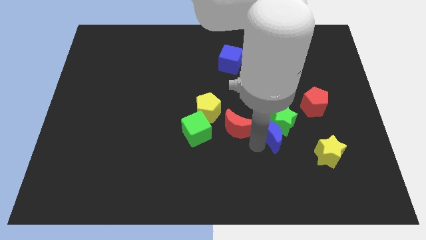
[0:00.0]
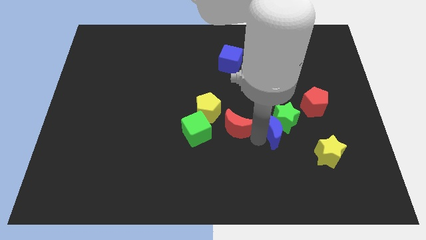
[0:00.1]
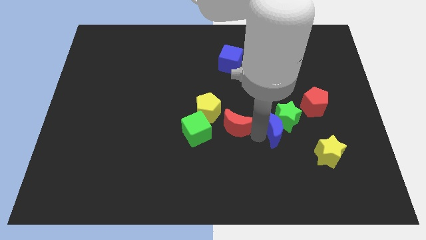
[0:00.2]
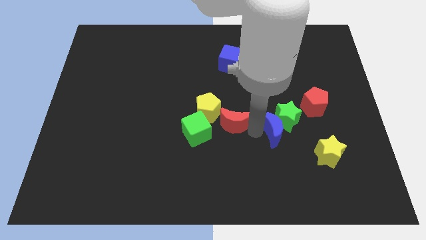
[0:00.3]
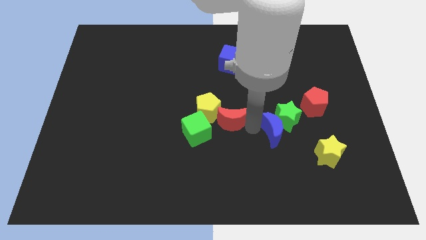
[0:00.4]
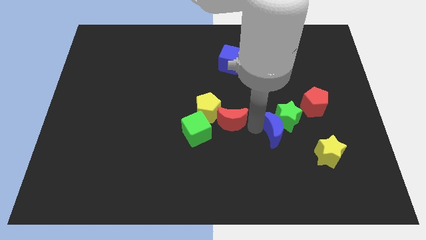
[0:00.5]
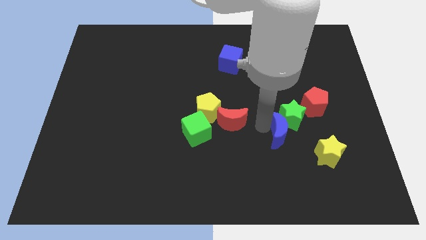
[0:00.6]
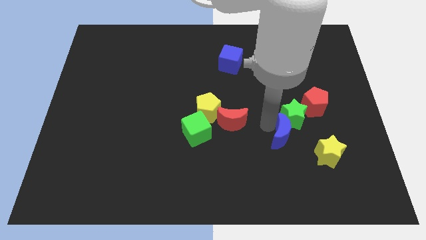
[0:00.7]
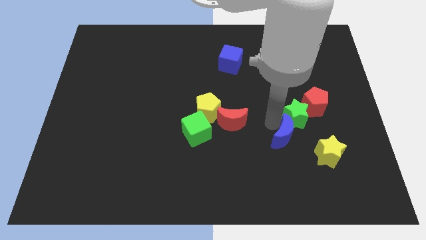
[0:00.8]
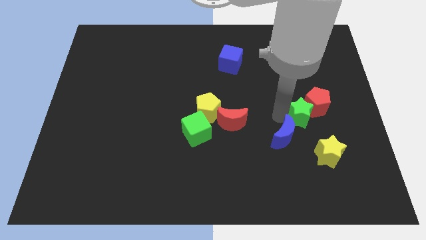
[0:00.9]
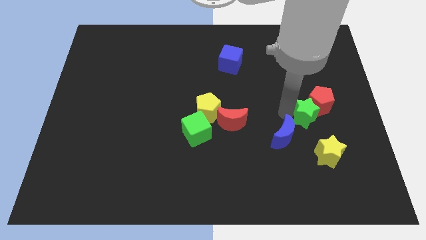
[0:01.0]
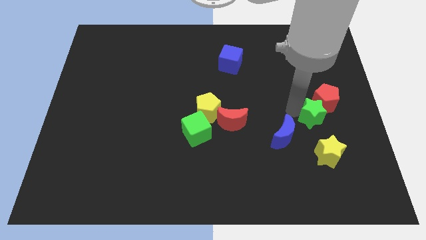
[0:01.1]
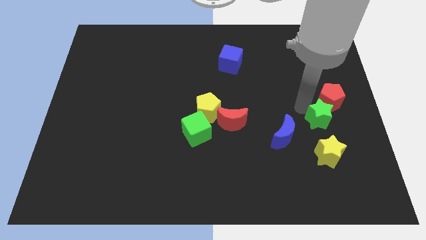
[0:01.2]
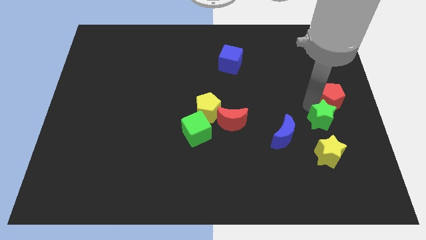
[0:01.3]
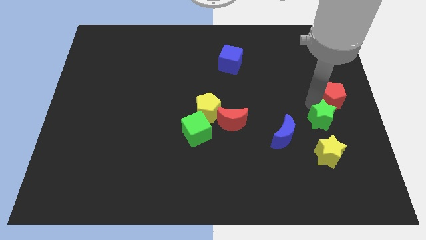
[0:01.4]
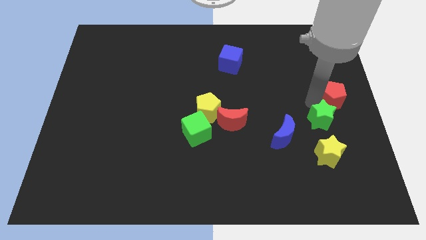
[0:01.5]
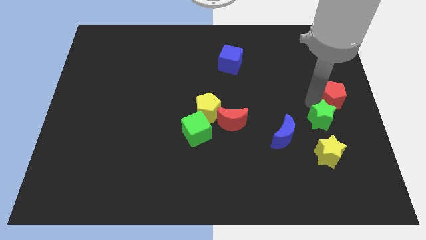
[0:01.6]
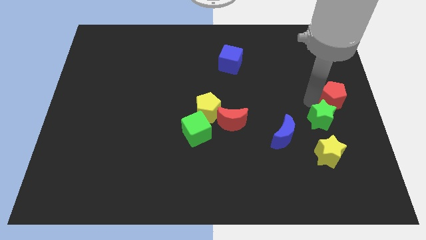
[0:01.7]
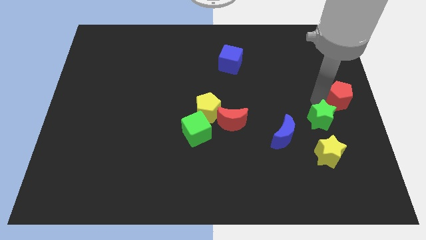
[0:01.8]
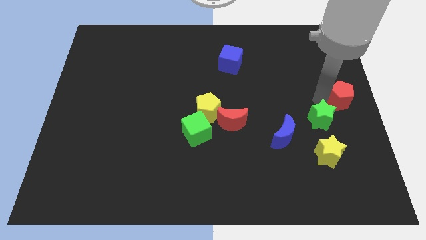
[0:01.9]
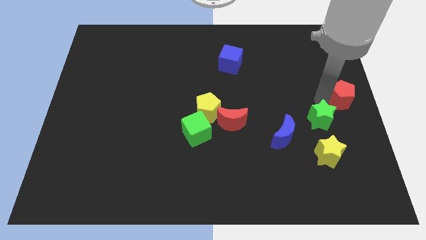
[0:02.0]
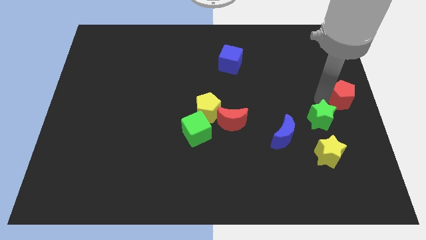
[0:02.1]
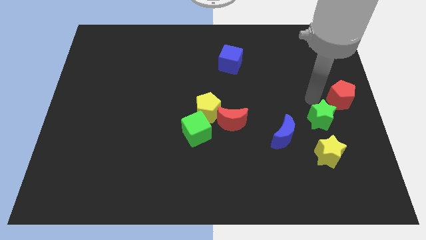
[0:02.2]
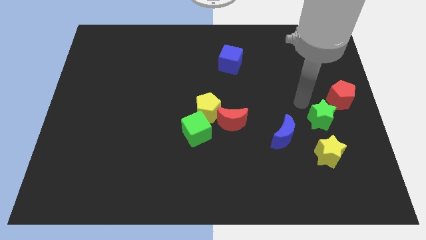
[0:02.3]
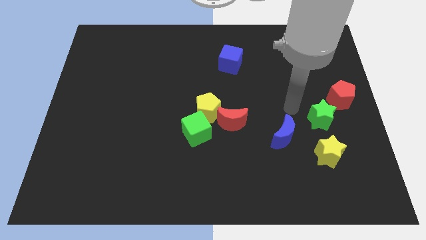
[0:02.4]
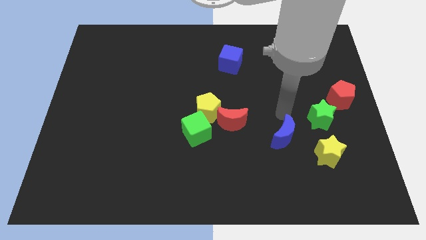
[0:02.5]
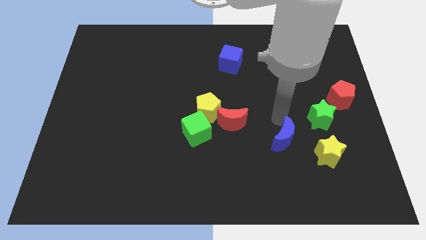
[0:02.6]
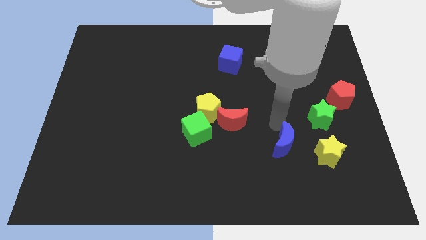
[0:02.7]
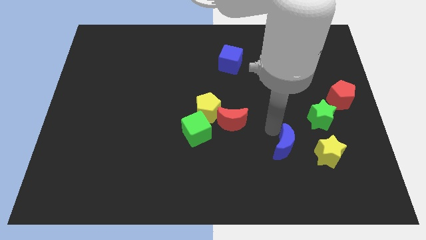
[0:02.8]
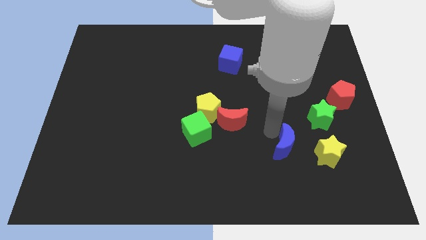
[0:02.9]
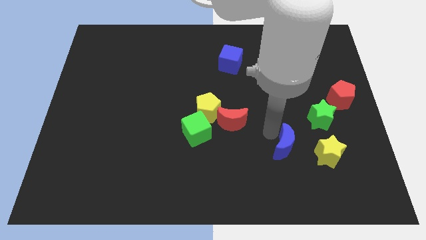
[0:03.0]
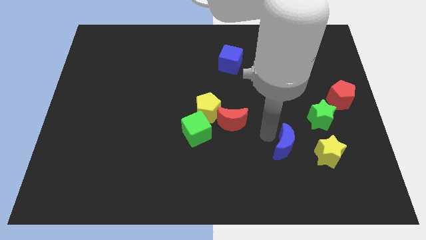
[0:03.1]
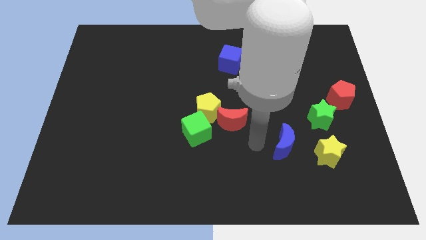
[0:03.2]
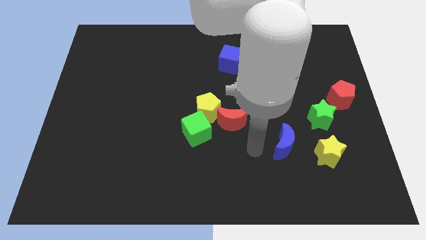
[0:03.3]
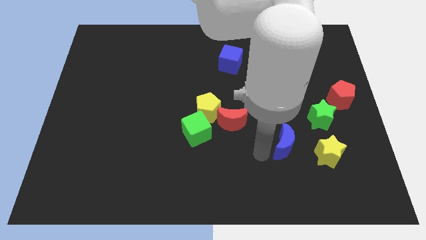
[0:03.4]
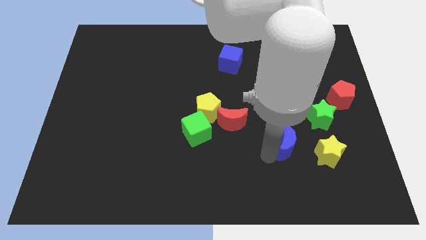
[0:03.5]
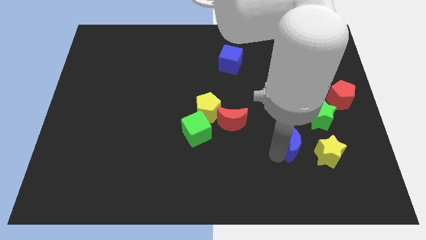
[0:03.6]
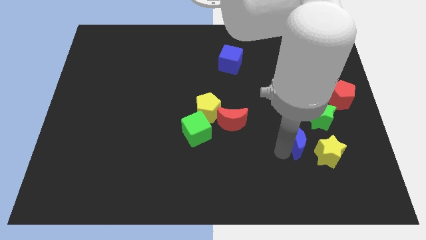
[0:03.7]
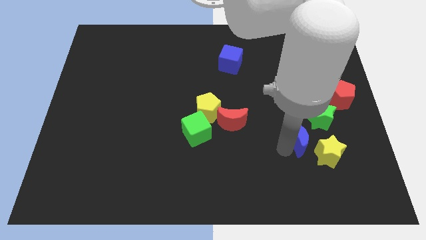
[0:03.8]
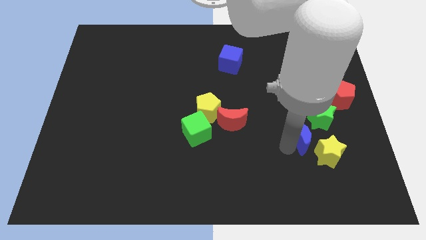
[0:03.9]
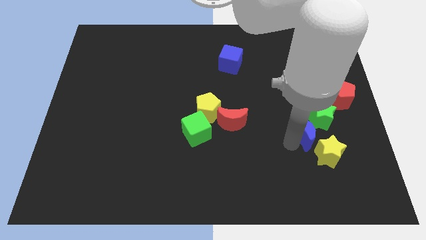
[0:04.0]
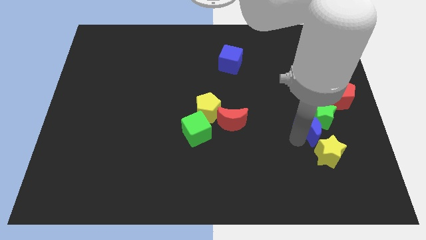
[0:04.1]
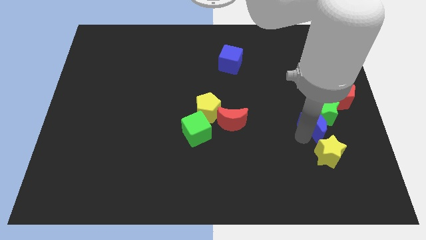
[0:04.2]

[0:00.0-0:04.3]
place red pentagon green star and blue crescent in a line diagonally

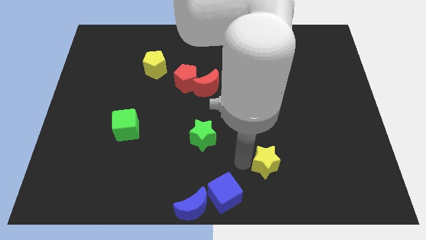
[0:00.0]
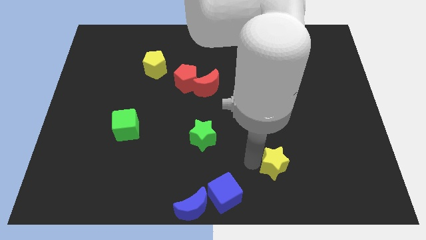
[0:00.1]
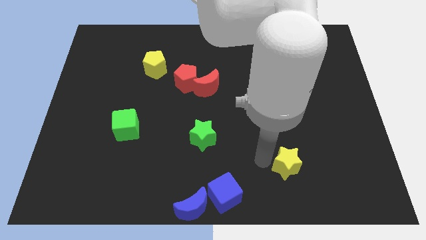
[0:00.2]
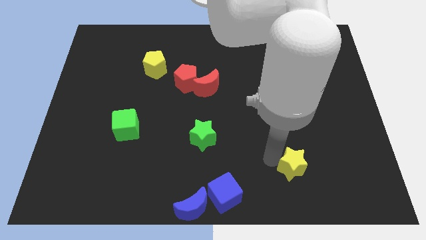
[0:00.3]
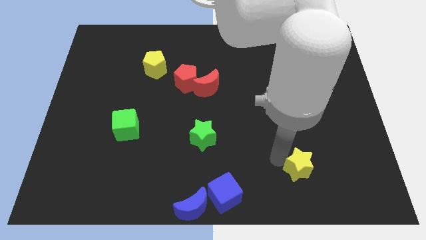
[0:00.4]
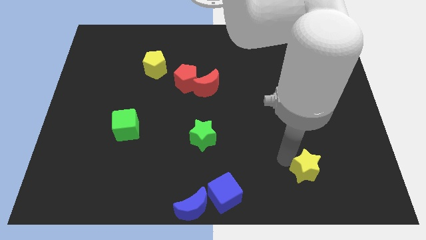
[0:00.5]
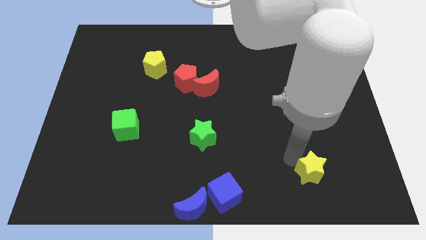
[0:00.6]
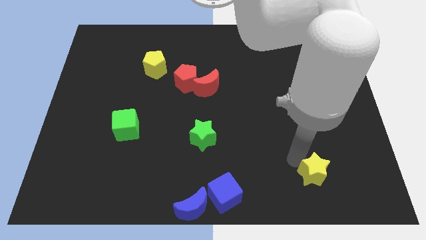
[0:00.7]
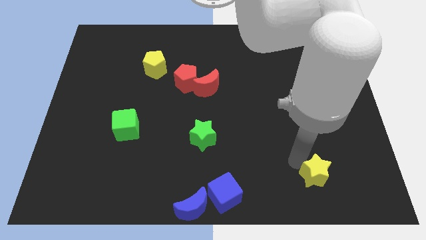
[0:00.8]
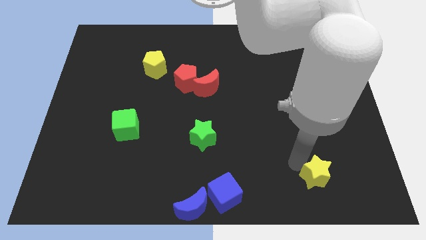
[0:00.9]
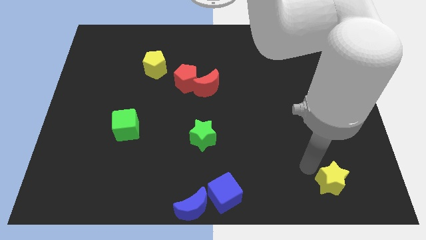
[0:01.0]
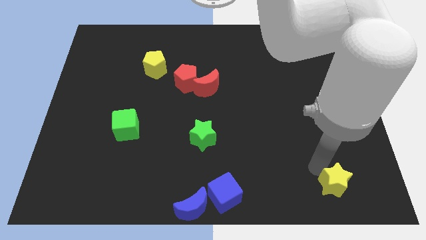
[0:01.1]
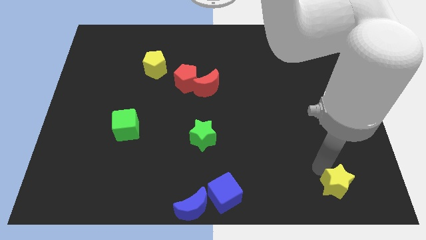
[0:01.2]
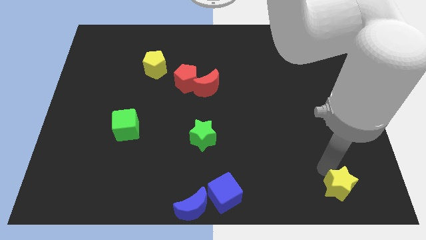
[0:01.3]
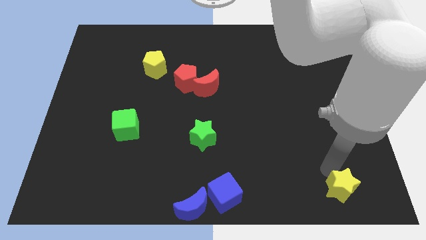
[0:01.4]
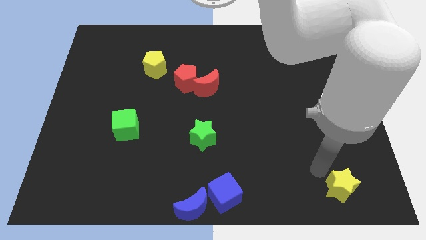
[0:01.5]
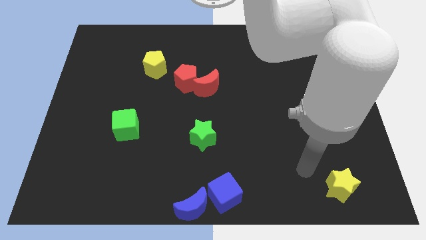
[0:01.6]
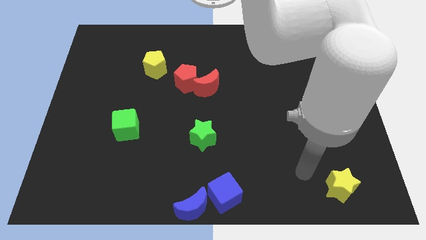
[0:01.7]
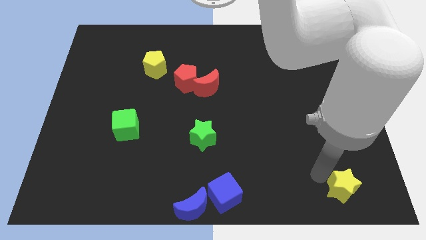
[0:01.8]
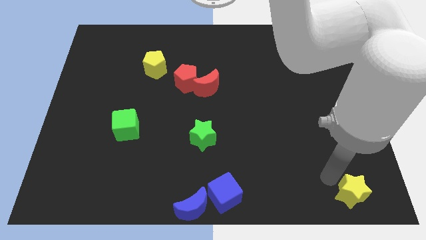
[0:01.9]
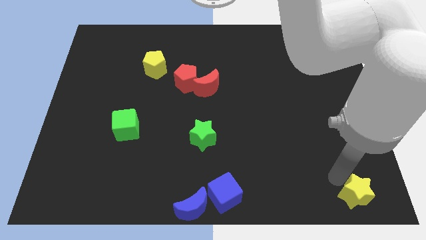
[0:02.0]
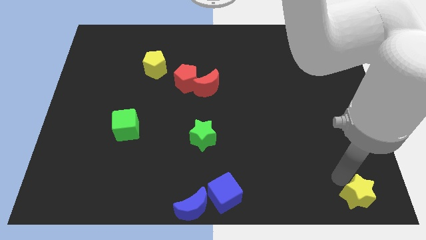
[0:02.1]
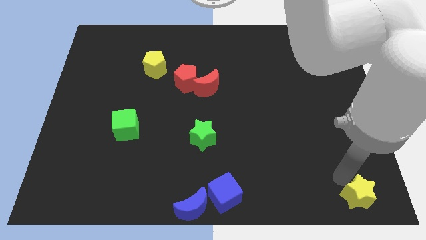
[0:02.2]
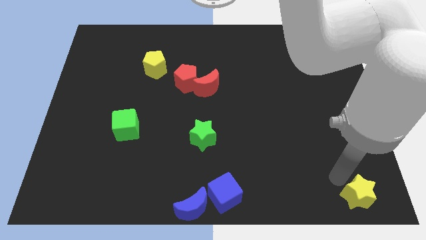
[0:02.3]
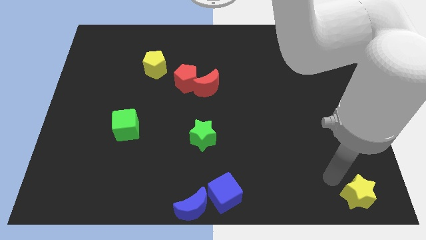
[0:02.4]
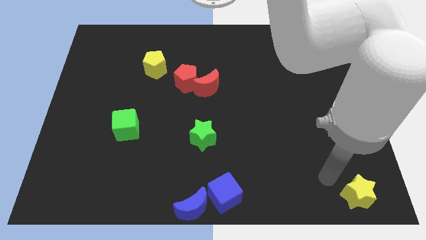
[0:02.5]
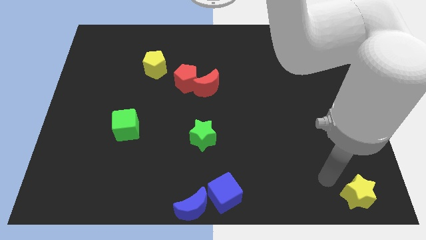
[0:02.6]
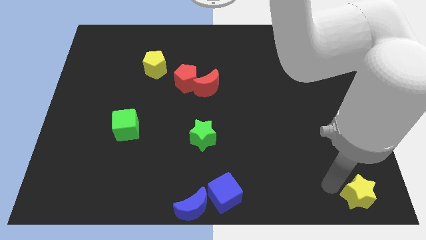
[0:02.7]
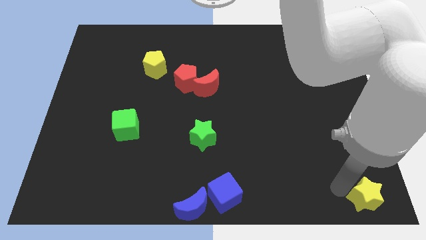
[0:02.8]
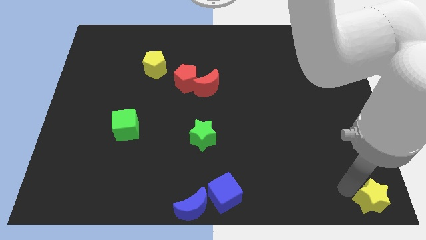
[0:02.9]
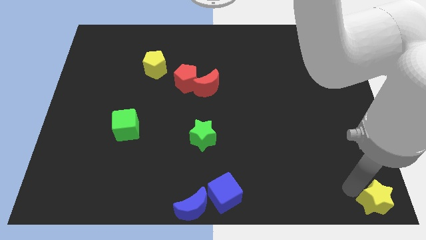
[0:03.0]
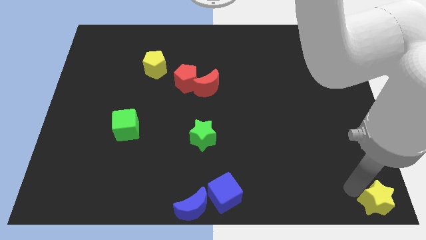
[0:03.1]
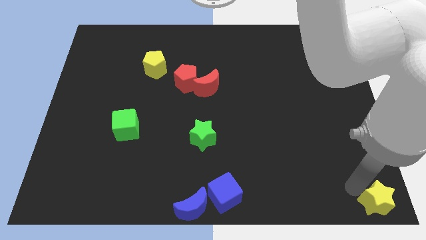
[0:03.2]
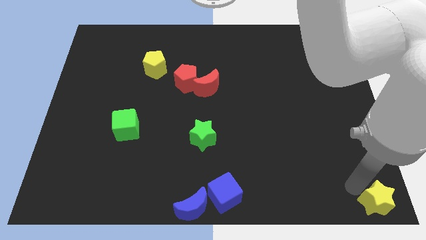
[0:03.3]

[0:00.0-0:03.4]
move yellow star horizontally right to blue cube

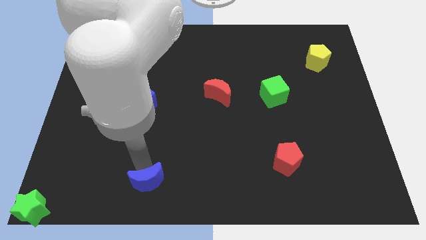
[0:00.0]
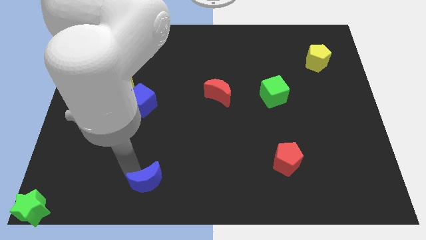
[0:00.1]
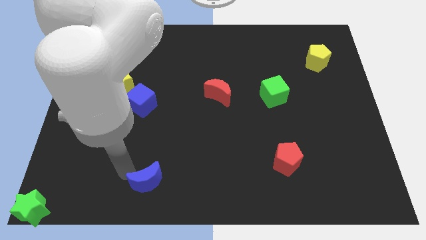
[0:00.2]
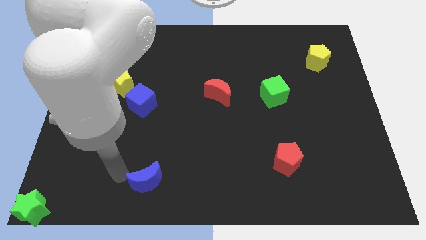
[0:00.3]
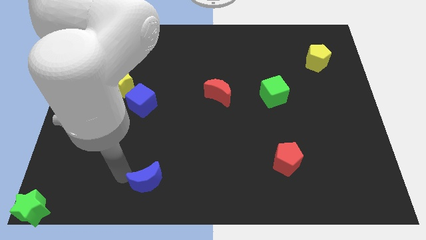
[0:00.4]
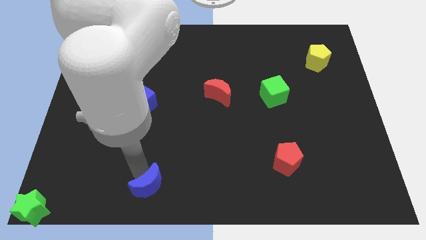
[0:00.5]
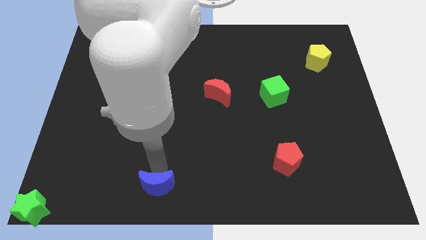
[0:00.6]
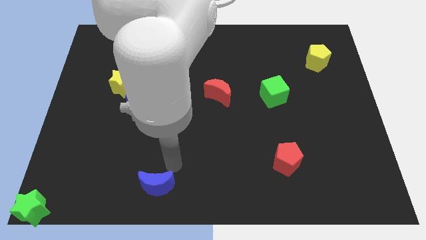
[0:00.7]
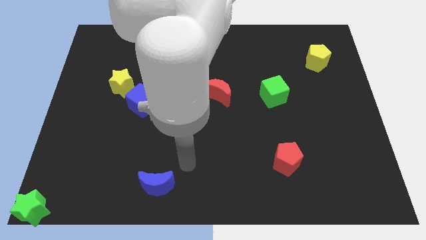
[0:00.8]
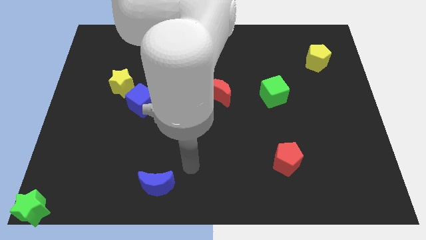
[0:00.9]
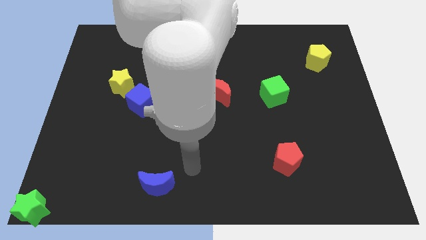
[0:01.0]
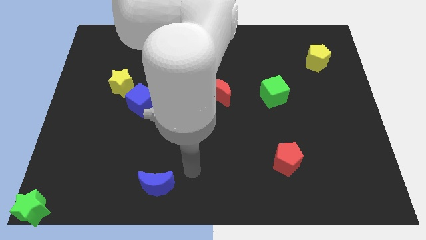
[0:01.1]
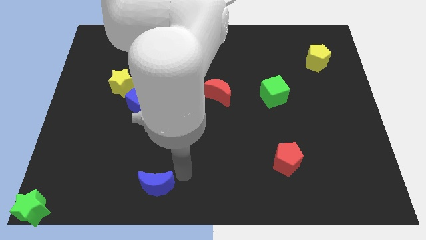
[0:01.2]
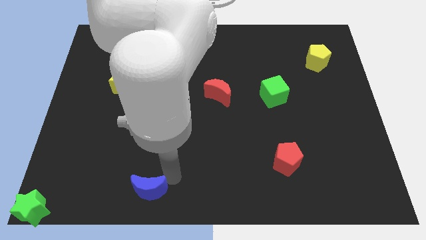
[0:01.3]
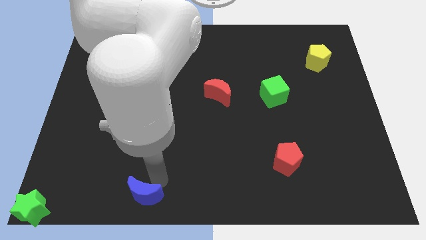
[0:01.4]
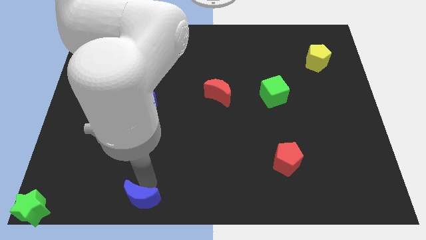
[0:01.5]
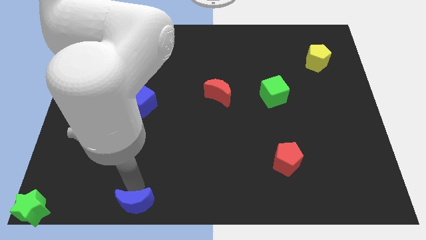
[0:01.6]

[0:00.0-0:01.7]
move the blue moon downwards
